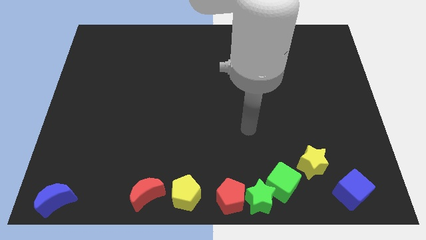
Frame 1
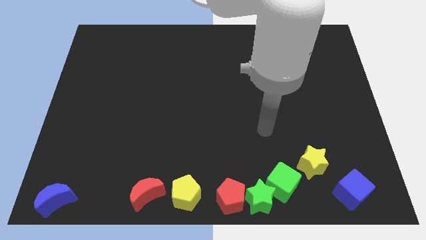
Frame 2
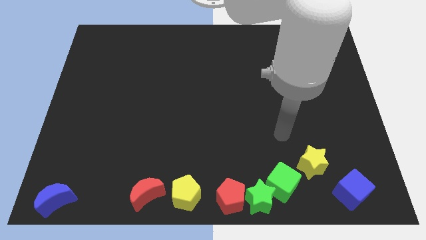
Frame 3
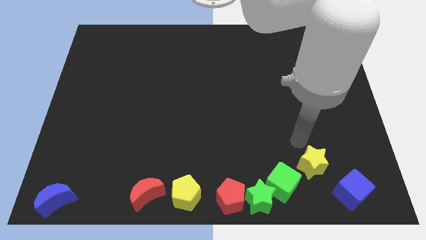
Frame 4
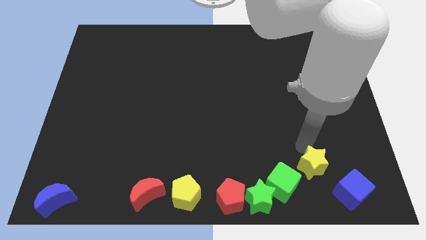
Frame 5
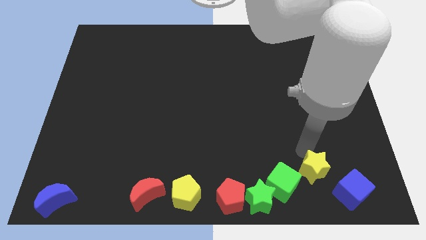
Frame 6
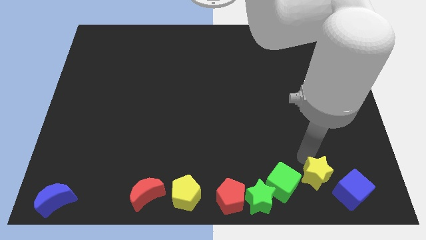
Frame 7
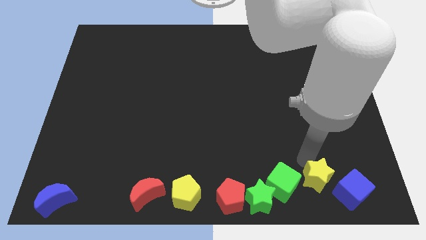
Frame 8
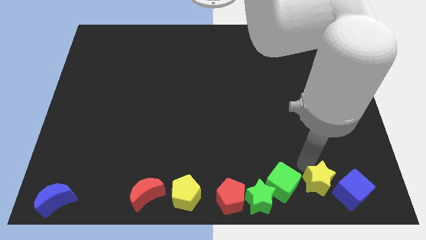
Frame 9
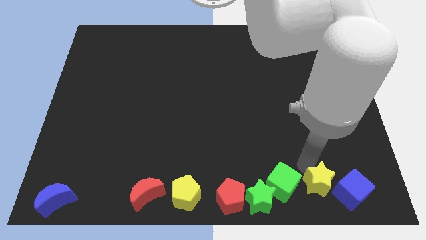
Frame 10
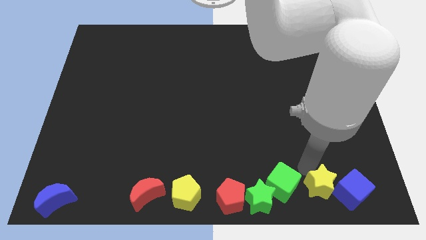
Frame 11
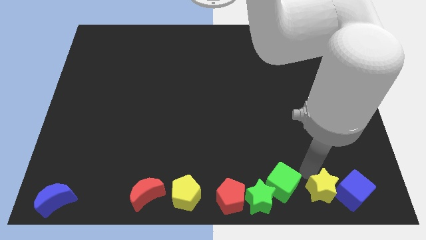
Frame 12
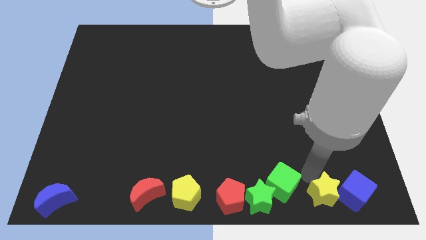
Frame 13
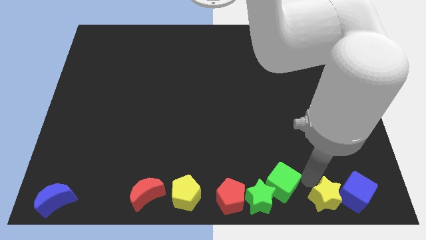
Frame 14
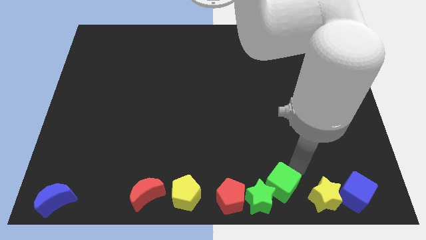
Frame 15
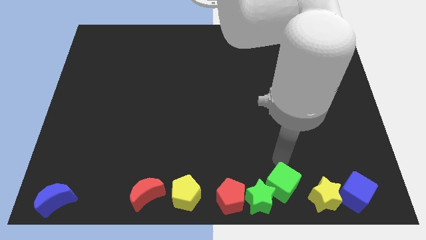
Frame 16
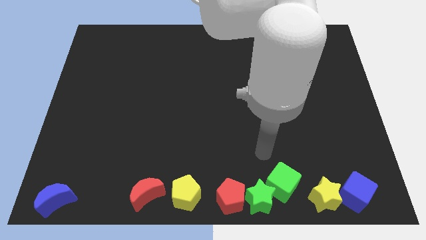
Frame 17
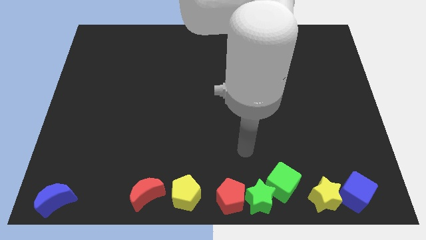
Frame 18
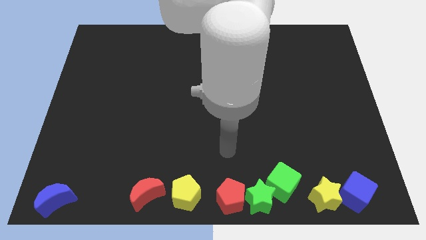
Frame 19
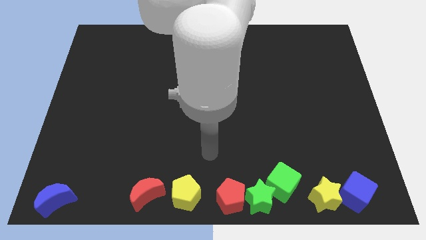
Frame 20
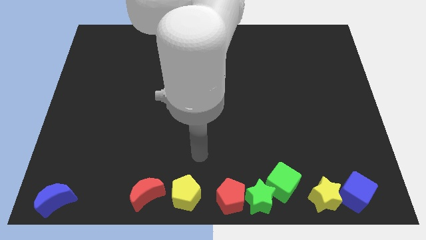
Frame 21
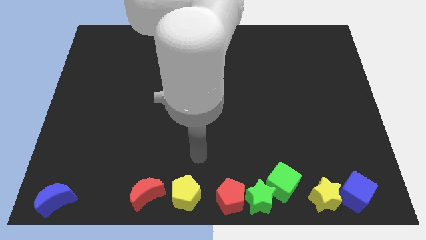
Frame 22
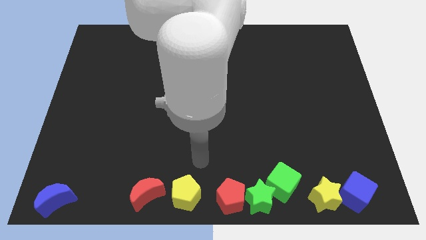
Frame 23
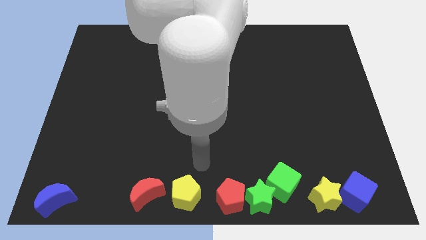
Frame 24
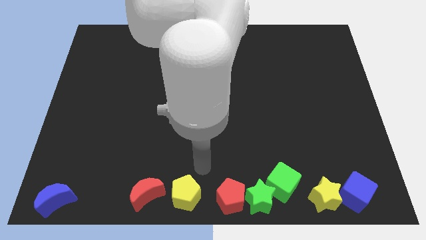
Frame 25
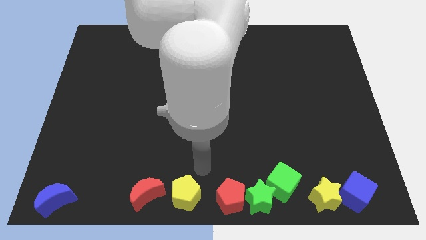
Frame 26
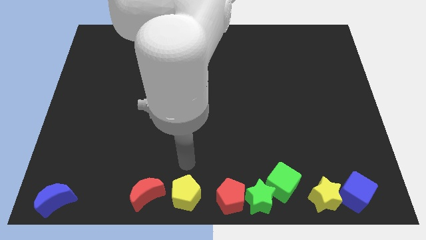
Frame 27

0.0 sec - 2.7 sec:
push the yellow star slightly downwards

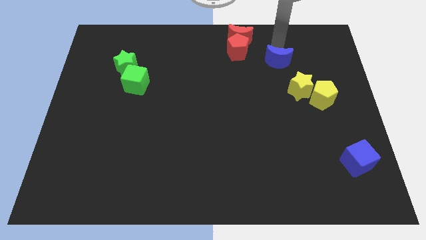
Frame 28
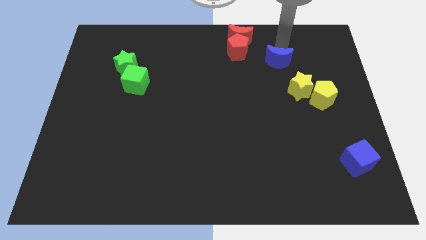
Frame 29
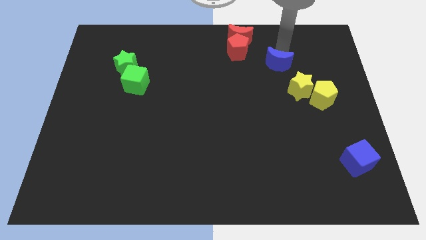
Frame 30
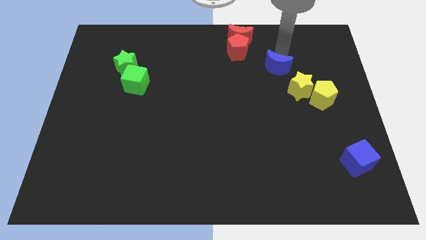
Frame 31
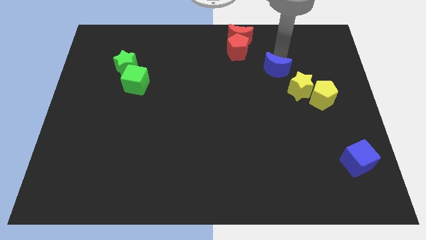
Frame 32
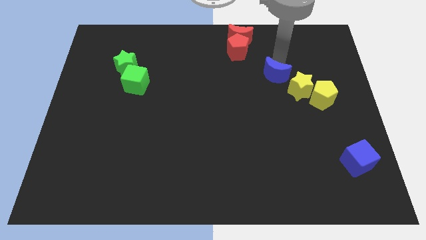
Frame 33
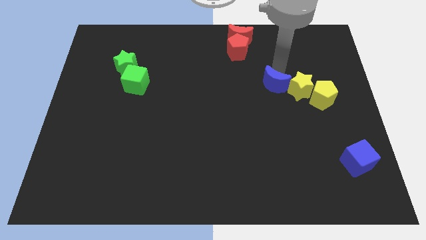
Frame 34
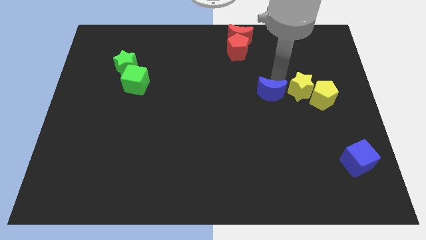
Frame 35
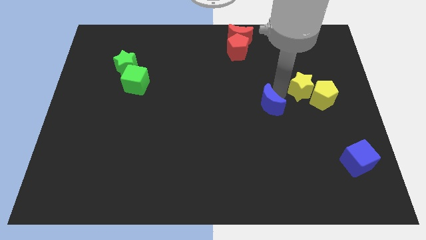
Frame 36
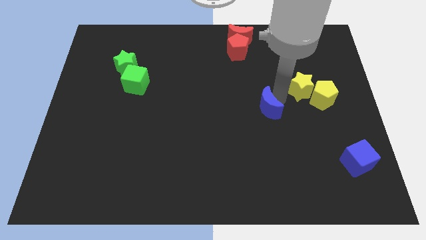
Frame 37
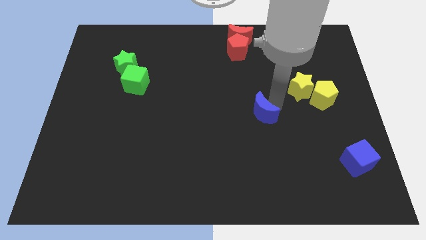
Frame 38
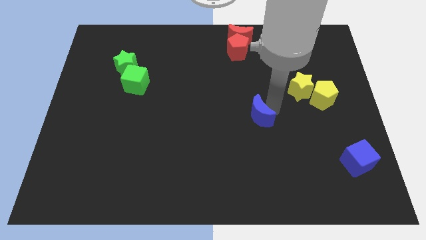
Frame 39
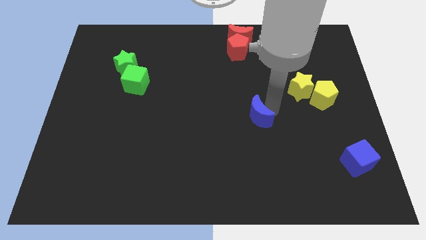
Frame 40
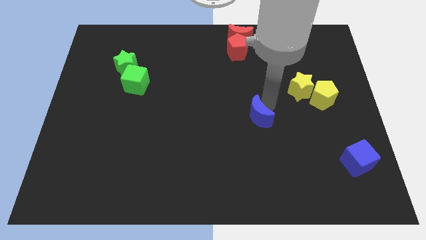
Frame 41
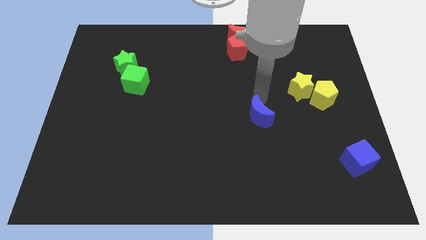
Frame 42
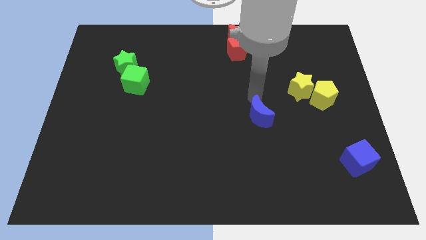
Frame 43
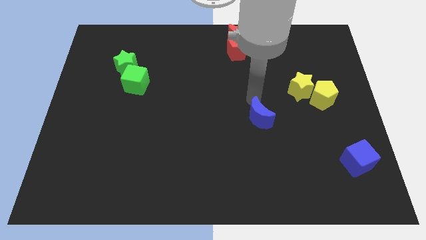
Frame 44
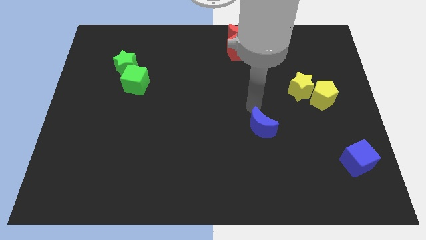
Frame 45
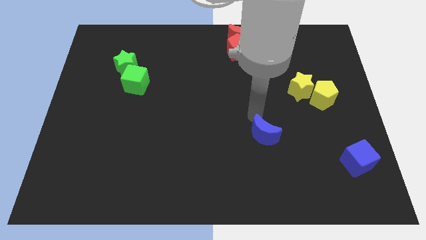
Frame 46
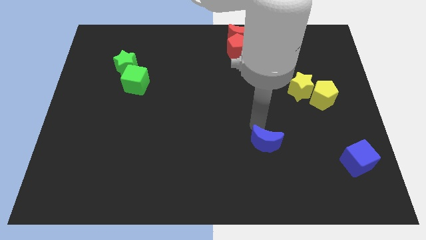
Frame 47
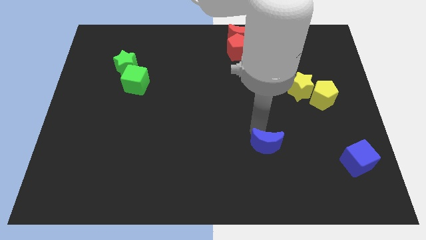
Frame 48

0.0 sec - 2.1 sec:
slide the blue crescent downwards

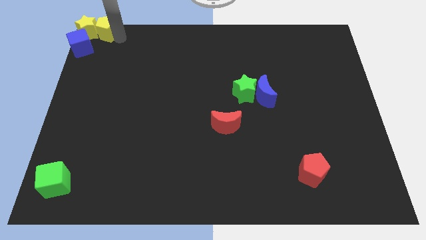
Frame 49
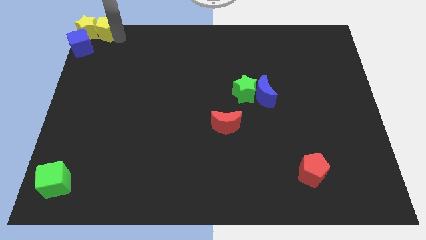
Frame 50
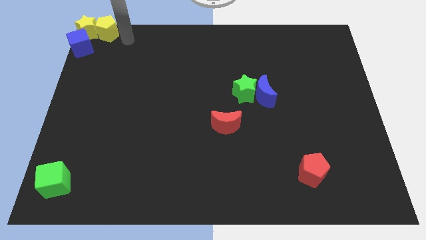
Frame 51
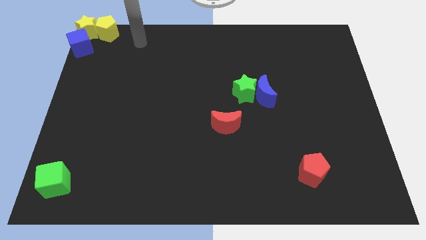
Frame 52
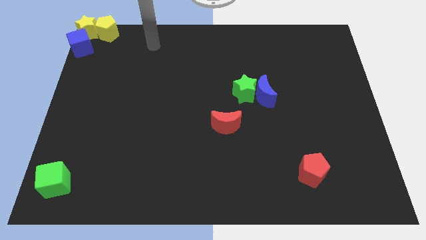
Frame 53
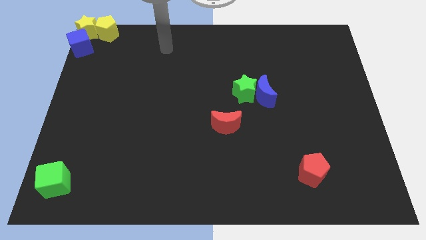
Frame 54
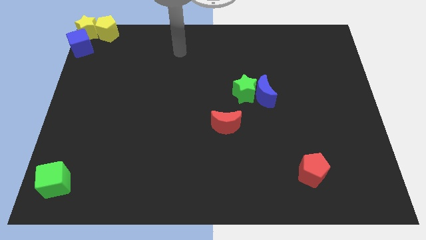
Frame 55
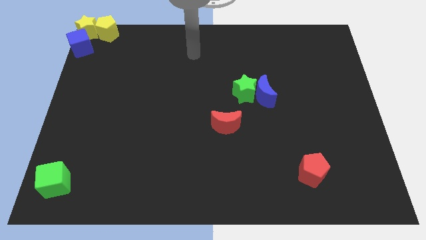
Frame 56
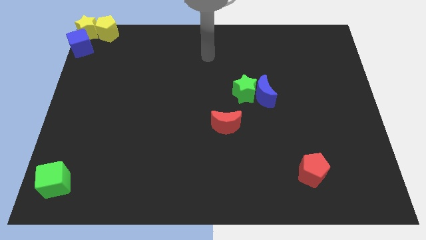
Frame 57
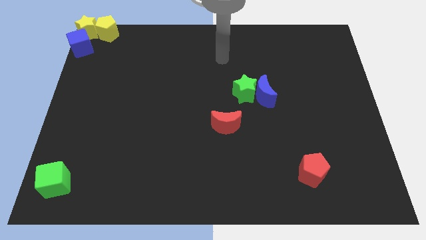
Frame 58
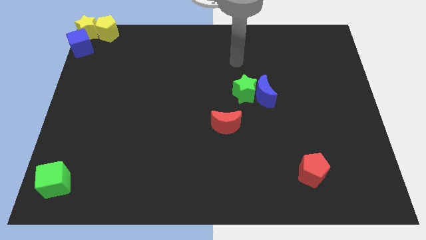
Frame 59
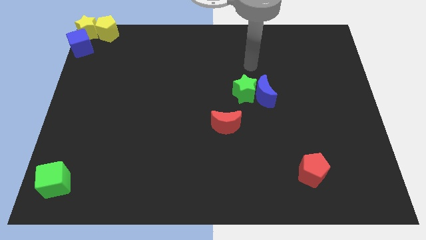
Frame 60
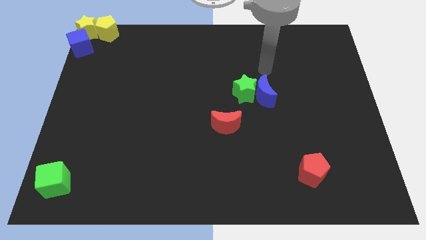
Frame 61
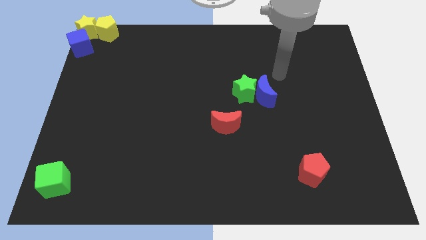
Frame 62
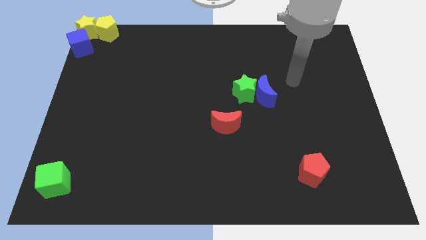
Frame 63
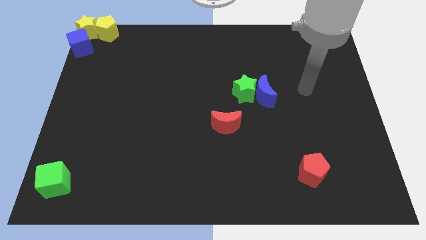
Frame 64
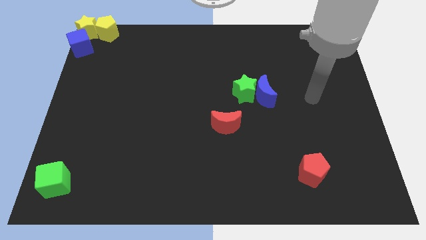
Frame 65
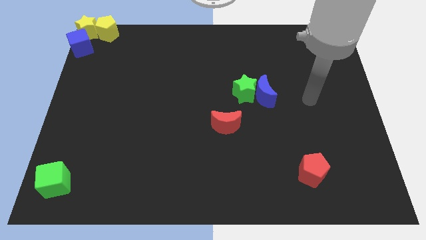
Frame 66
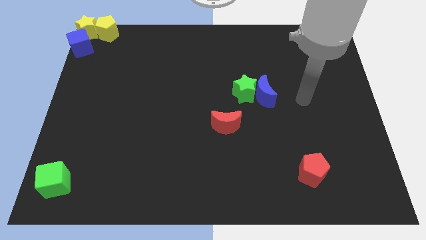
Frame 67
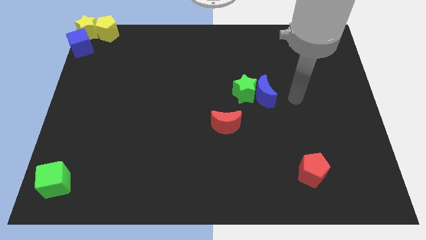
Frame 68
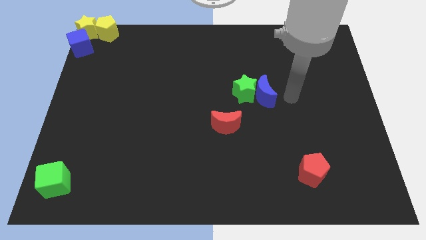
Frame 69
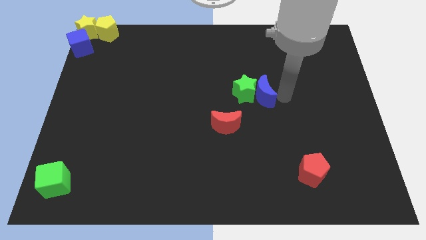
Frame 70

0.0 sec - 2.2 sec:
move your hand towards the blue crescent

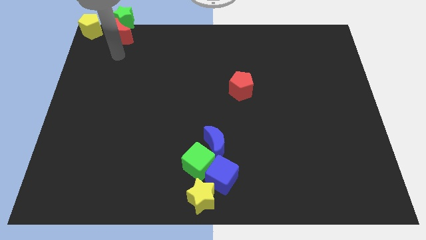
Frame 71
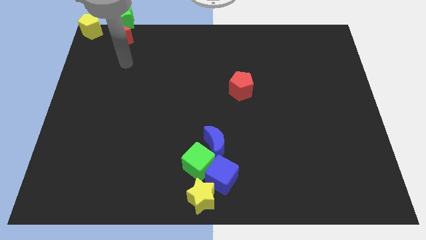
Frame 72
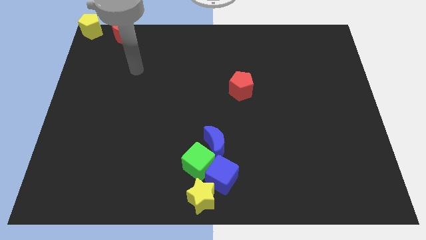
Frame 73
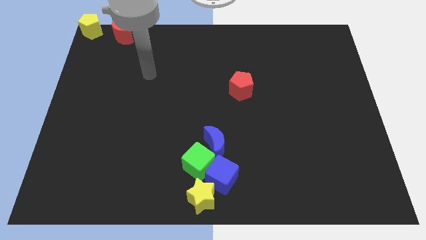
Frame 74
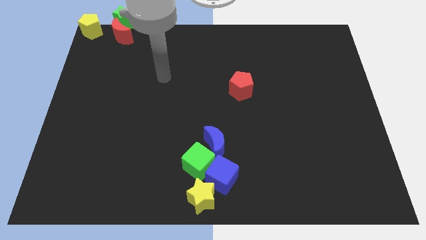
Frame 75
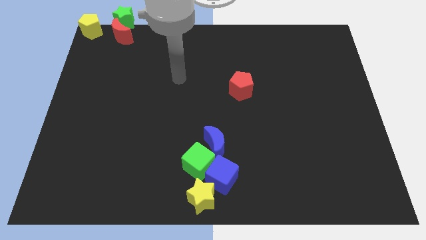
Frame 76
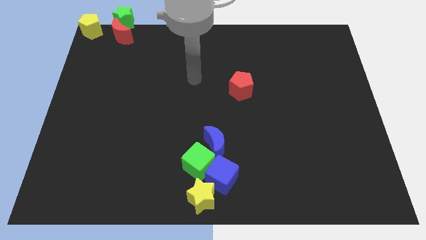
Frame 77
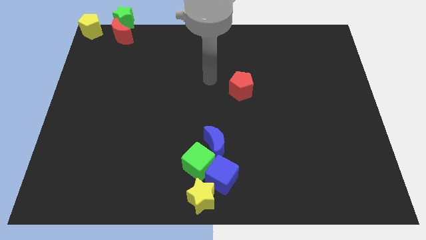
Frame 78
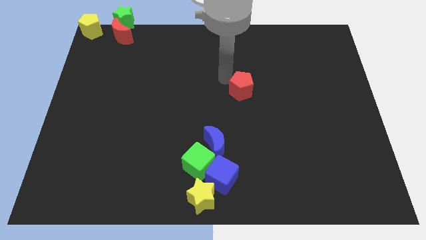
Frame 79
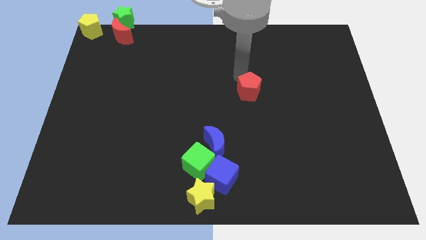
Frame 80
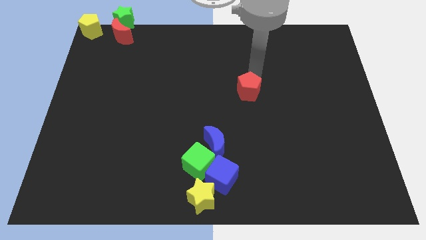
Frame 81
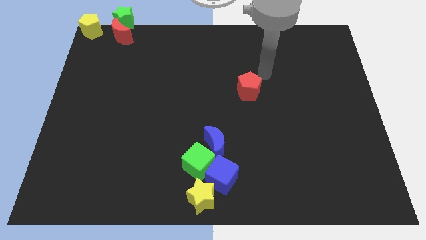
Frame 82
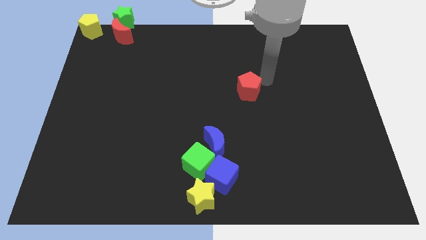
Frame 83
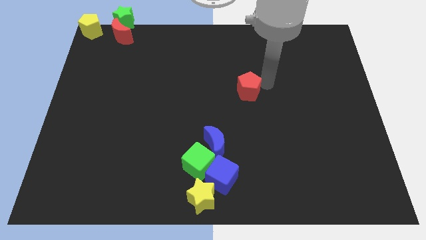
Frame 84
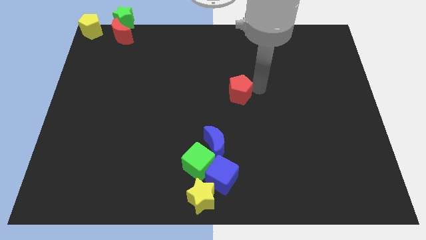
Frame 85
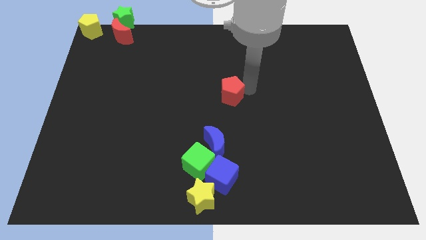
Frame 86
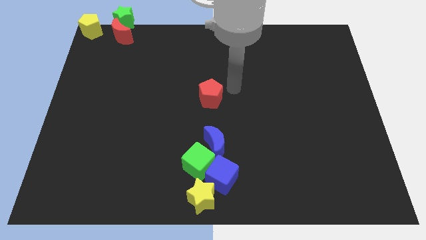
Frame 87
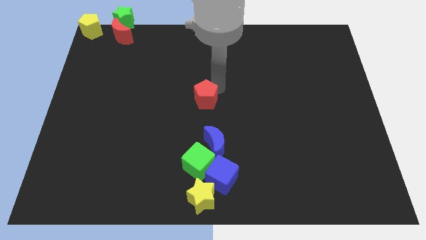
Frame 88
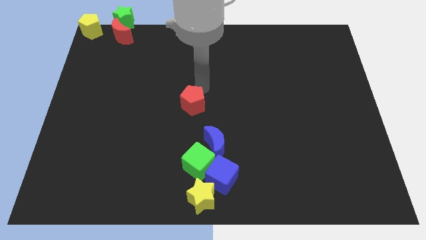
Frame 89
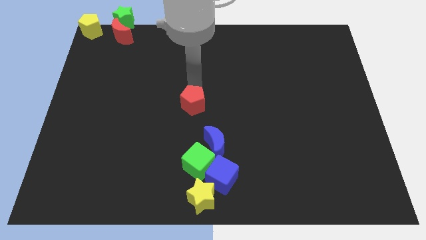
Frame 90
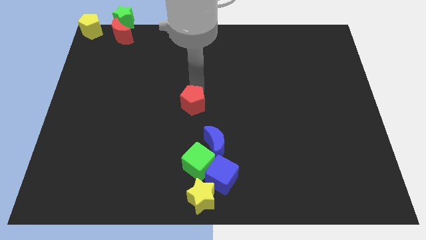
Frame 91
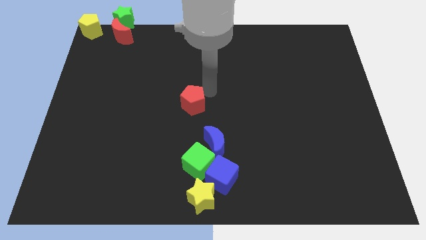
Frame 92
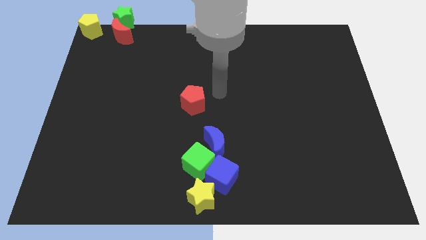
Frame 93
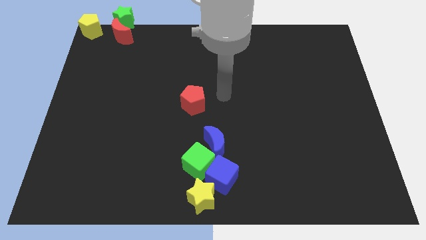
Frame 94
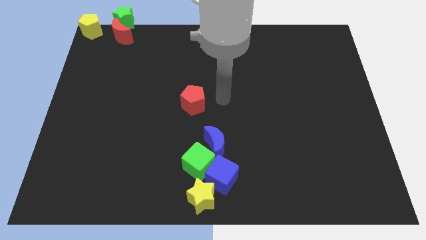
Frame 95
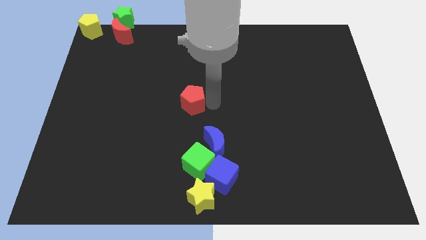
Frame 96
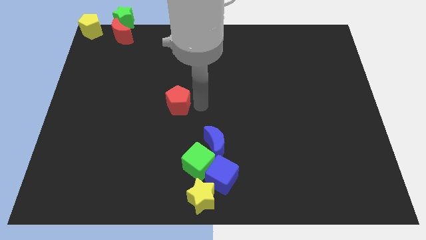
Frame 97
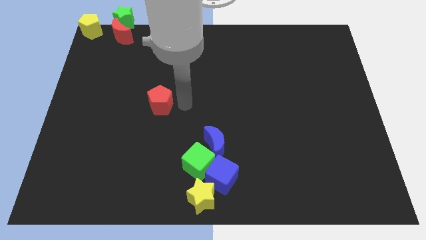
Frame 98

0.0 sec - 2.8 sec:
move the red pentagon to the top left of the blue crescent
